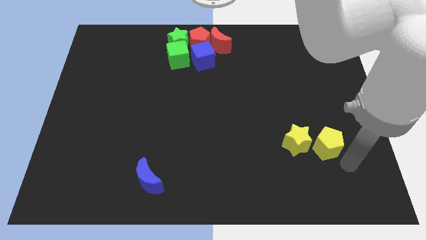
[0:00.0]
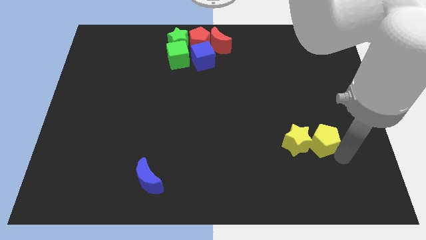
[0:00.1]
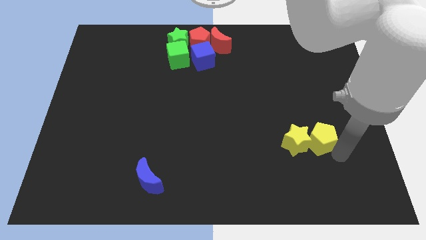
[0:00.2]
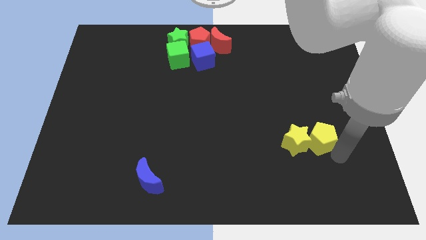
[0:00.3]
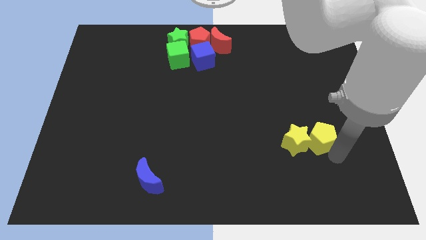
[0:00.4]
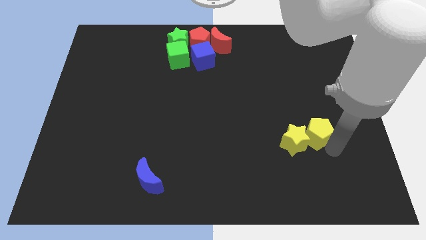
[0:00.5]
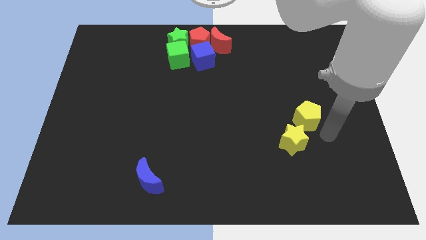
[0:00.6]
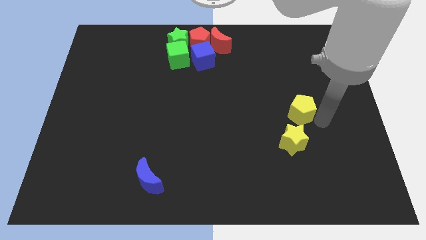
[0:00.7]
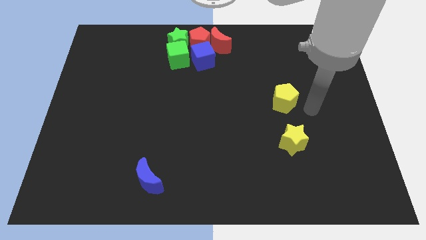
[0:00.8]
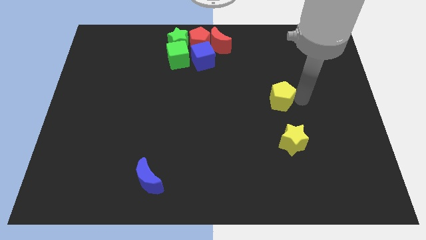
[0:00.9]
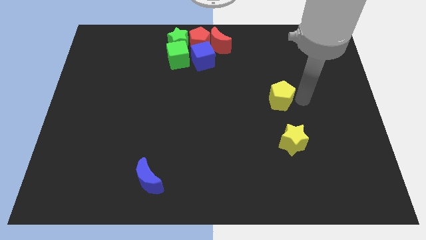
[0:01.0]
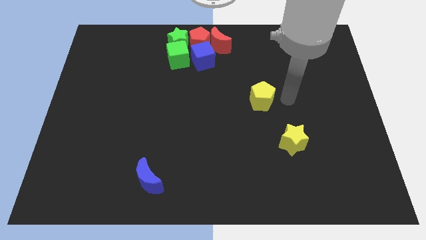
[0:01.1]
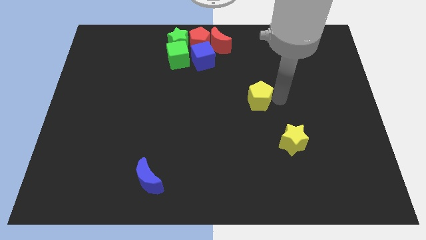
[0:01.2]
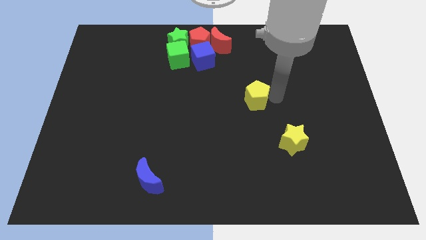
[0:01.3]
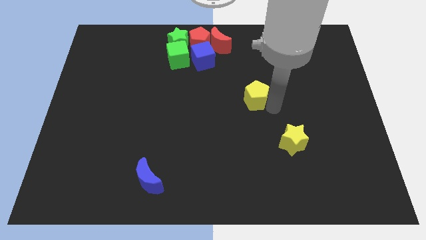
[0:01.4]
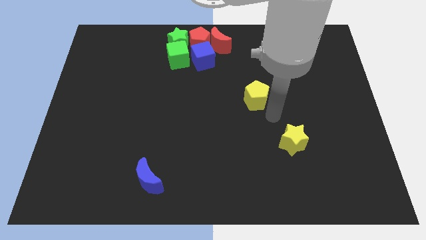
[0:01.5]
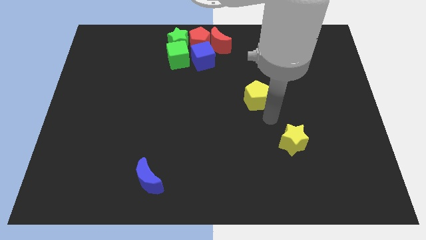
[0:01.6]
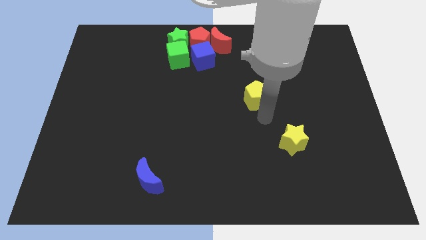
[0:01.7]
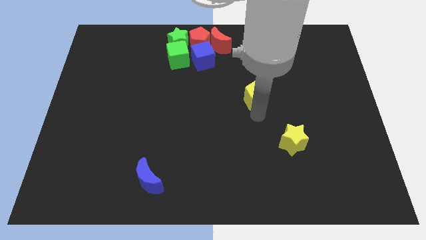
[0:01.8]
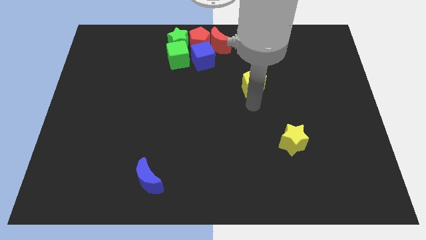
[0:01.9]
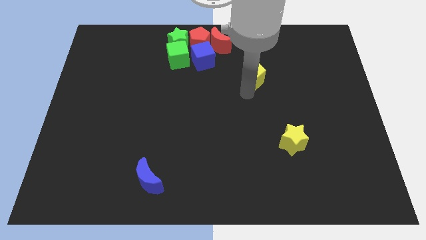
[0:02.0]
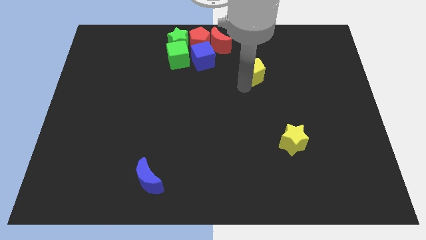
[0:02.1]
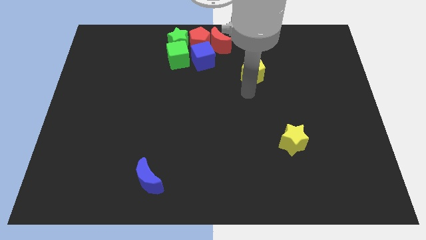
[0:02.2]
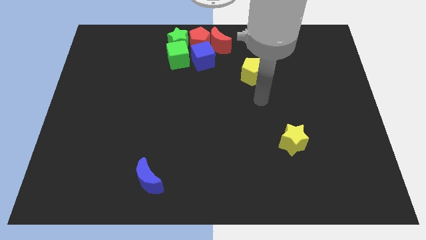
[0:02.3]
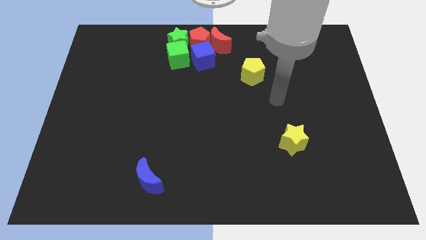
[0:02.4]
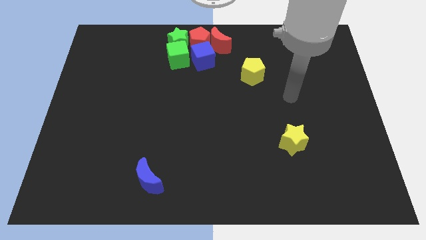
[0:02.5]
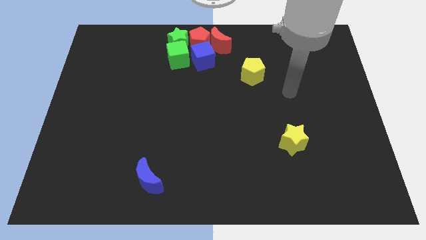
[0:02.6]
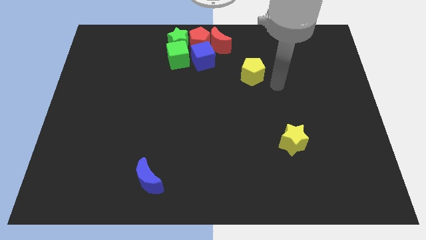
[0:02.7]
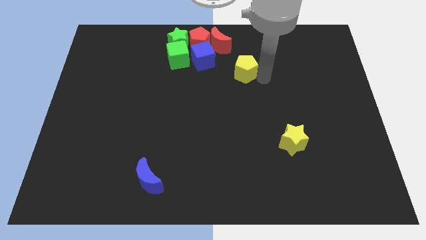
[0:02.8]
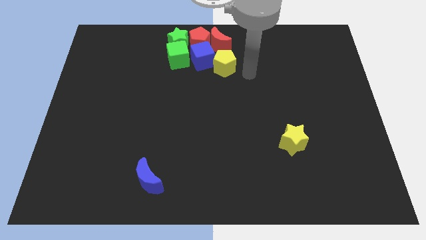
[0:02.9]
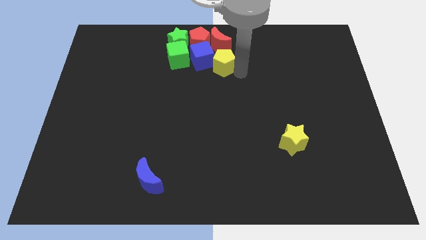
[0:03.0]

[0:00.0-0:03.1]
separate yellow pentagon from yellow star

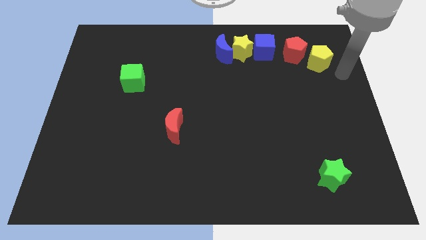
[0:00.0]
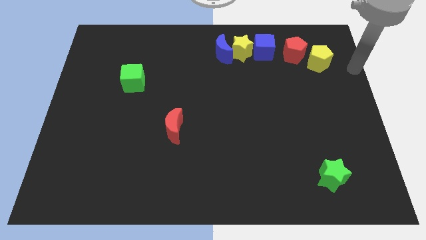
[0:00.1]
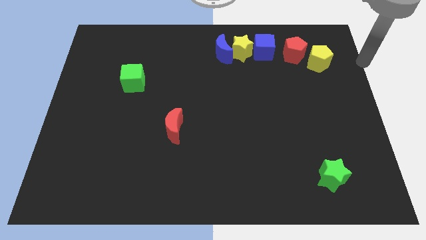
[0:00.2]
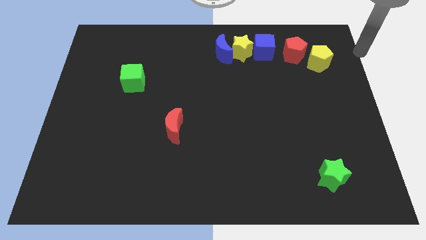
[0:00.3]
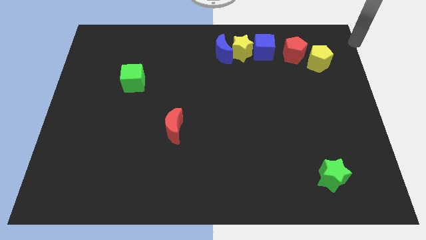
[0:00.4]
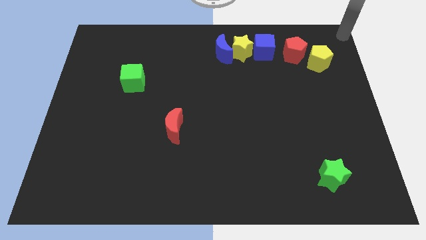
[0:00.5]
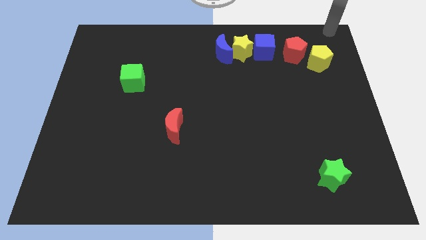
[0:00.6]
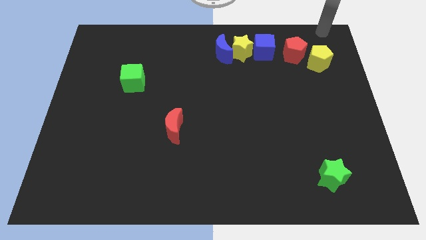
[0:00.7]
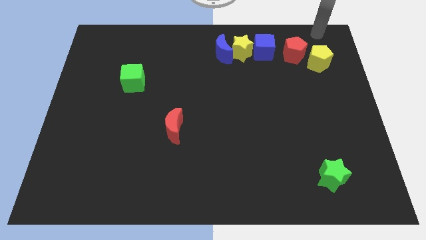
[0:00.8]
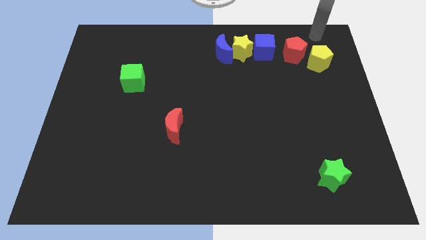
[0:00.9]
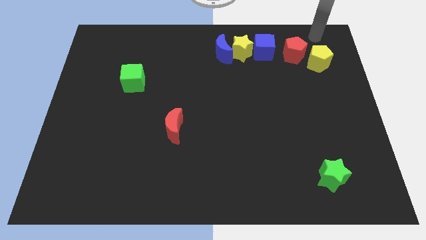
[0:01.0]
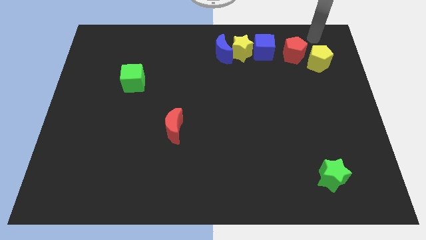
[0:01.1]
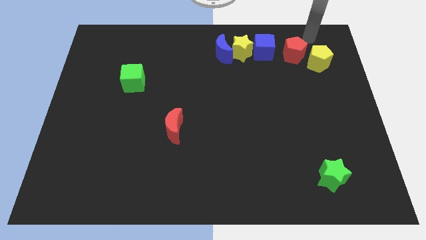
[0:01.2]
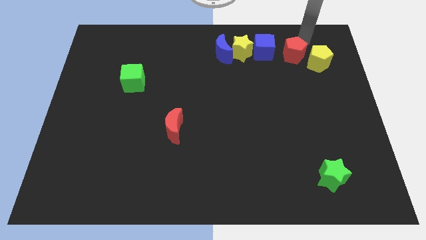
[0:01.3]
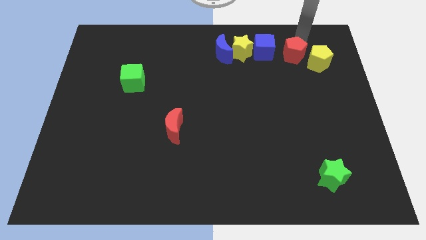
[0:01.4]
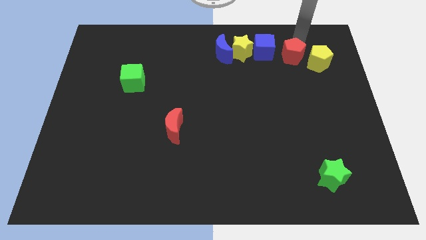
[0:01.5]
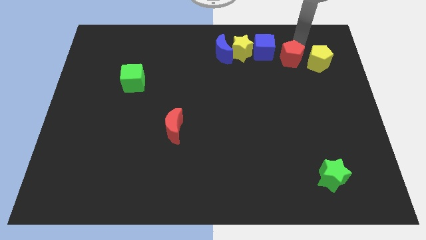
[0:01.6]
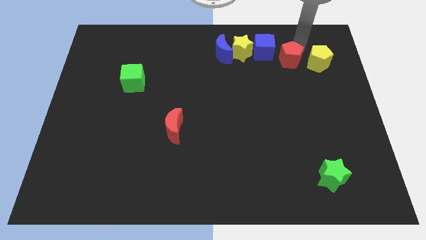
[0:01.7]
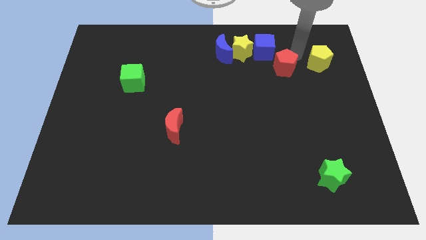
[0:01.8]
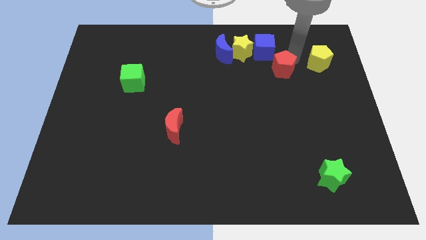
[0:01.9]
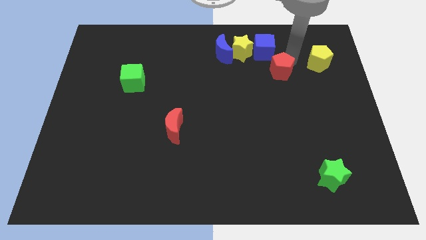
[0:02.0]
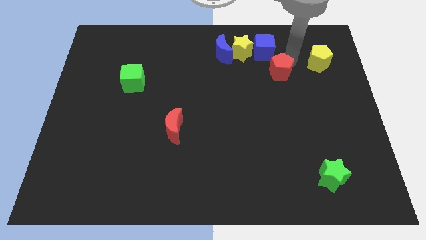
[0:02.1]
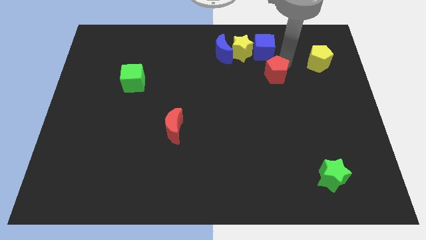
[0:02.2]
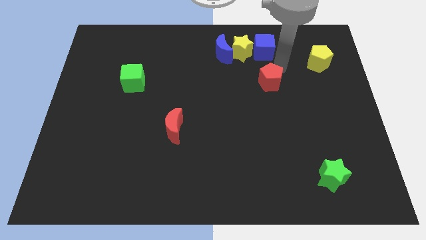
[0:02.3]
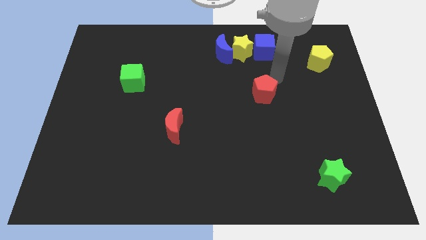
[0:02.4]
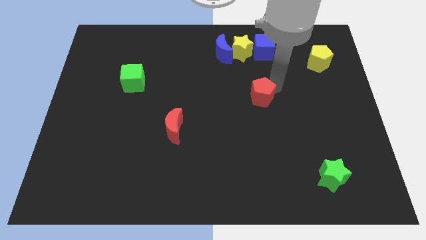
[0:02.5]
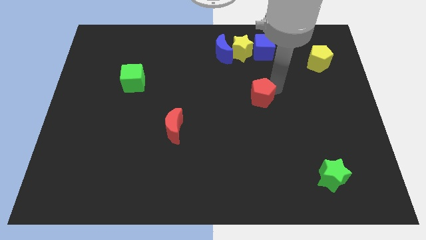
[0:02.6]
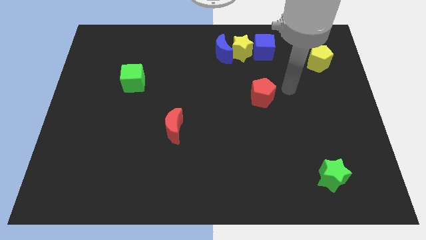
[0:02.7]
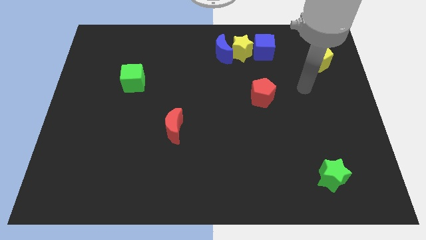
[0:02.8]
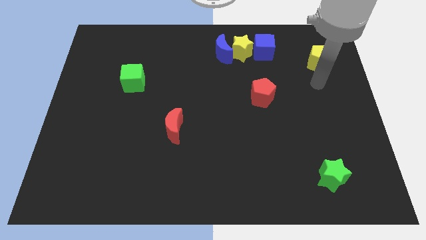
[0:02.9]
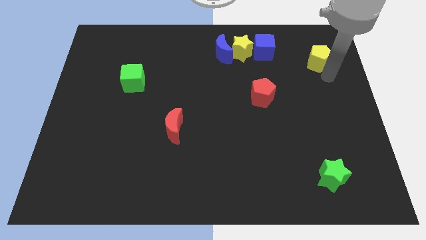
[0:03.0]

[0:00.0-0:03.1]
push the red pentagon towards the bottom side of the board

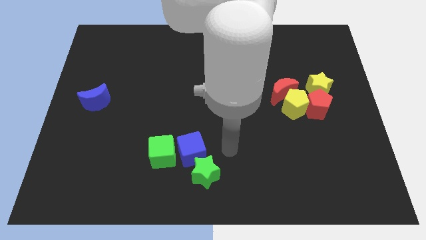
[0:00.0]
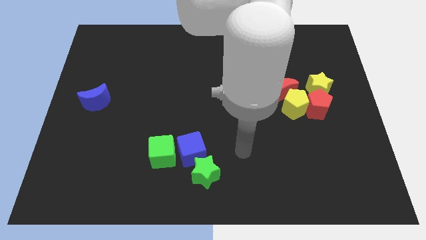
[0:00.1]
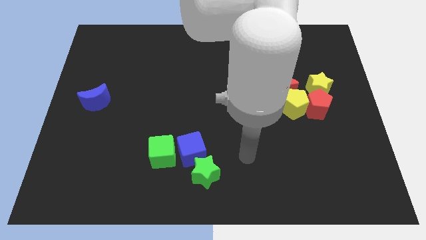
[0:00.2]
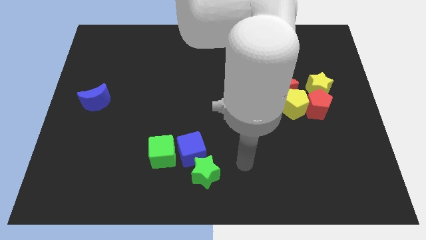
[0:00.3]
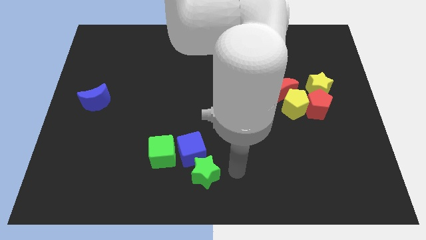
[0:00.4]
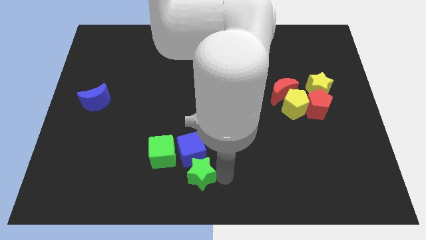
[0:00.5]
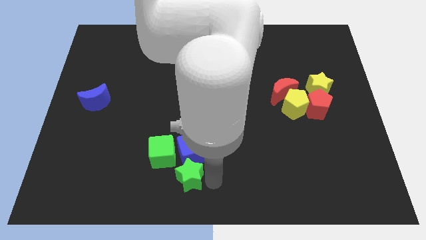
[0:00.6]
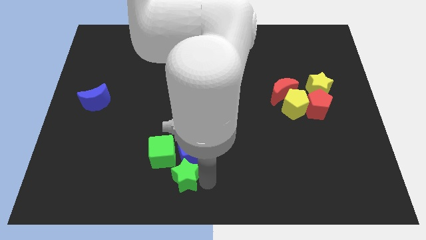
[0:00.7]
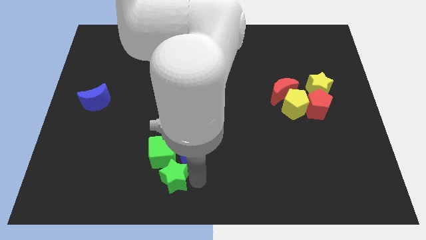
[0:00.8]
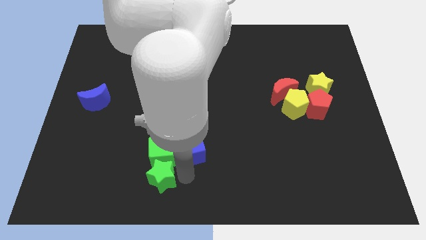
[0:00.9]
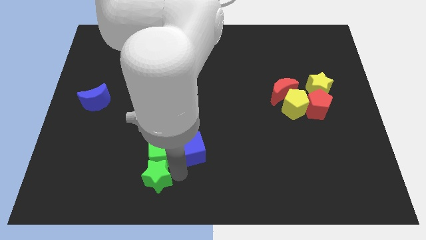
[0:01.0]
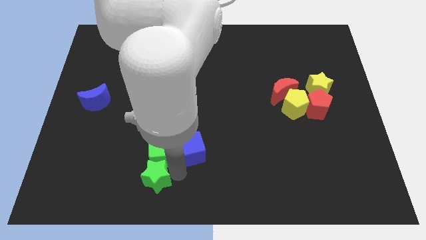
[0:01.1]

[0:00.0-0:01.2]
push the green star to the bottom of the green cube

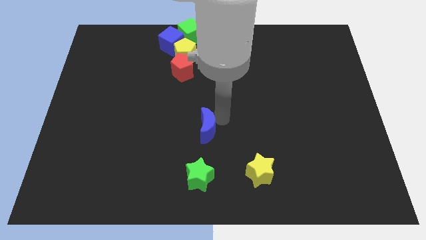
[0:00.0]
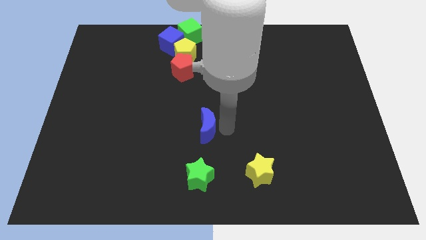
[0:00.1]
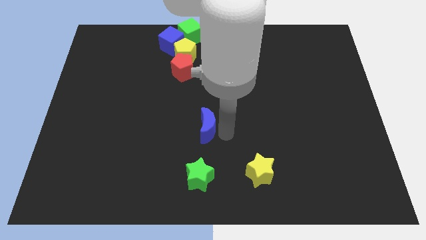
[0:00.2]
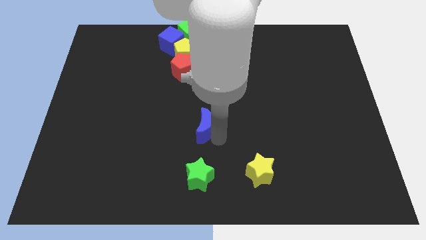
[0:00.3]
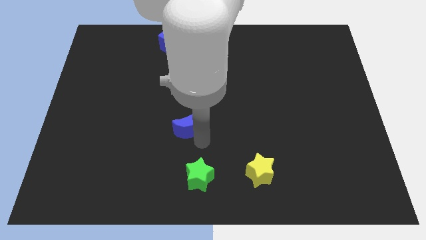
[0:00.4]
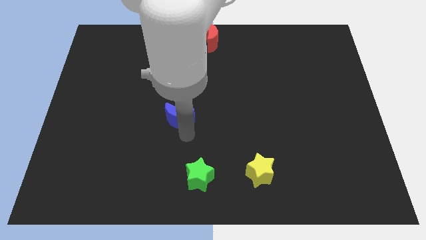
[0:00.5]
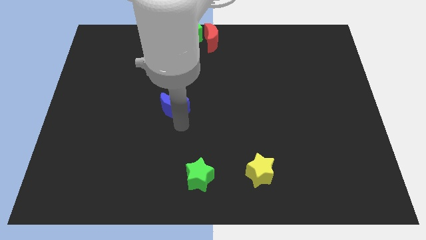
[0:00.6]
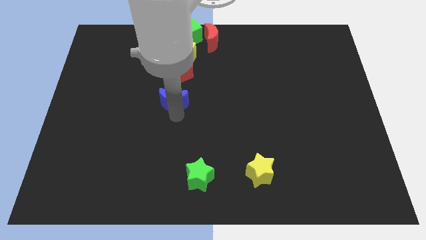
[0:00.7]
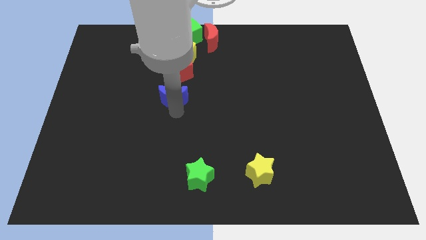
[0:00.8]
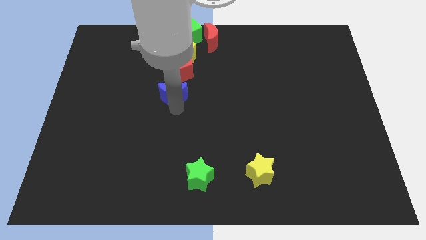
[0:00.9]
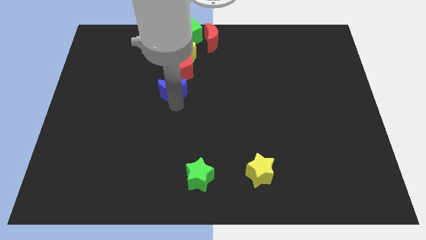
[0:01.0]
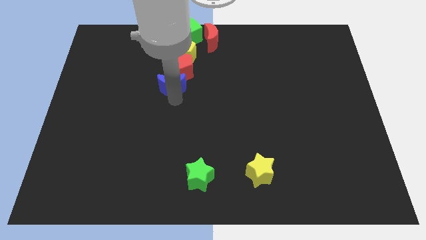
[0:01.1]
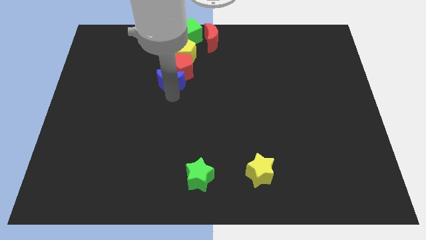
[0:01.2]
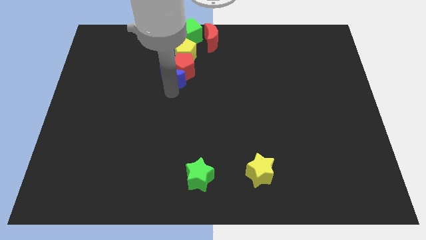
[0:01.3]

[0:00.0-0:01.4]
drag the blue crescent into the bottom side of the red pentagon
